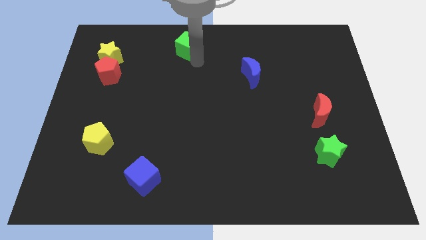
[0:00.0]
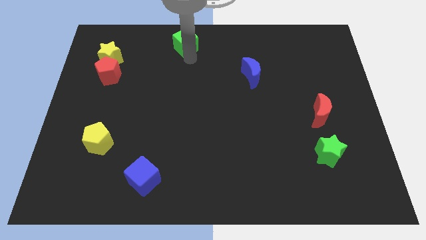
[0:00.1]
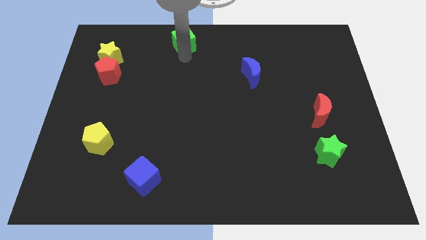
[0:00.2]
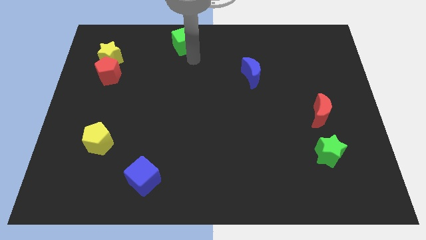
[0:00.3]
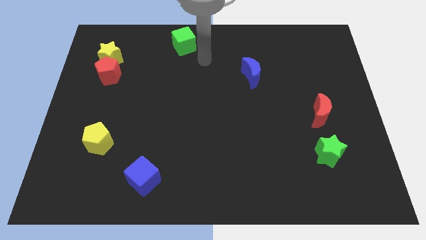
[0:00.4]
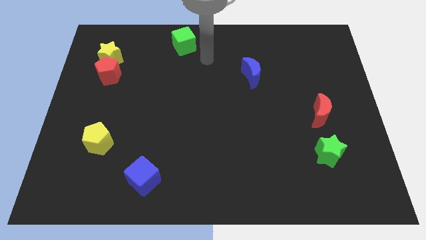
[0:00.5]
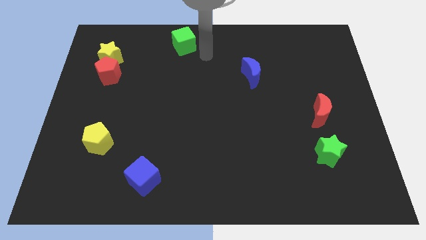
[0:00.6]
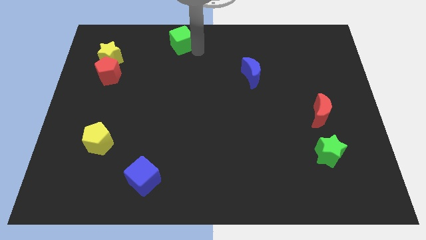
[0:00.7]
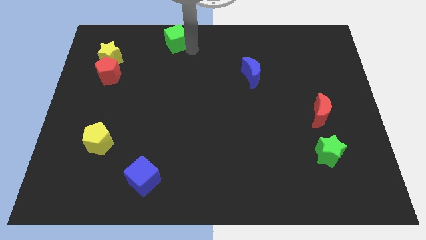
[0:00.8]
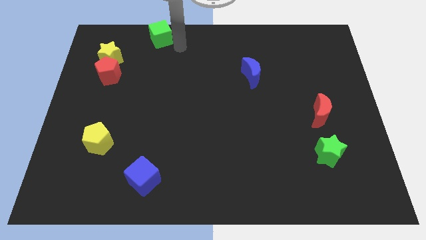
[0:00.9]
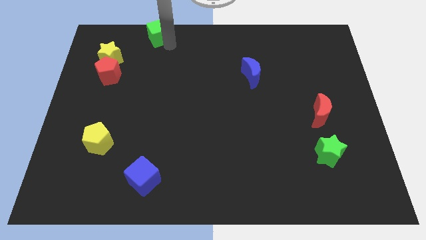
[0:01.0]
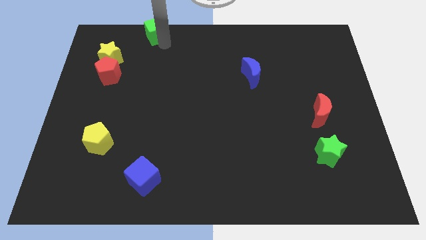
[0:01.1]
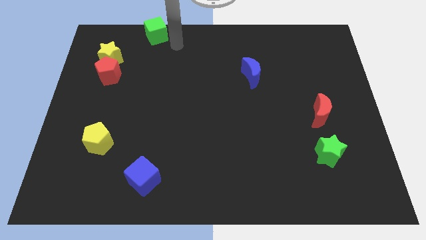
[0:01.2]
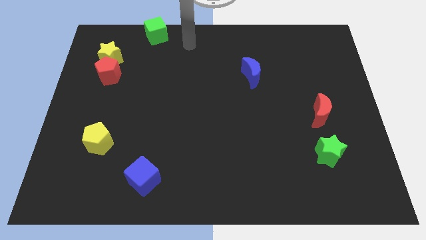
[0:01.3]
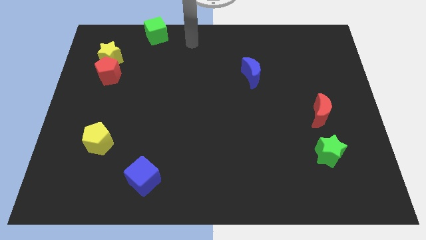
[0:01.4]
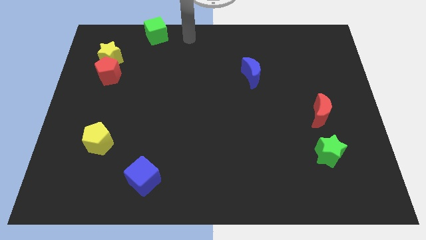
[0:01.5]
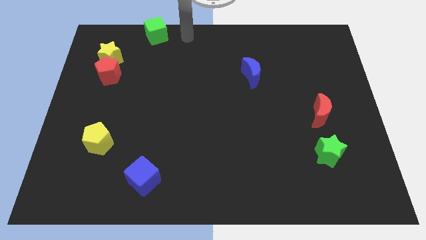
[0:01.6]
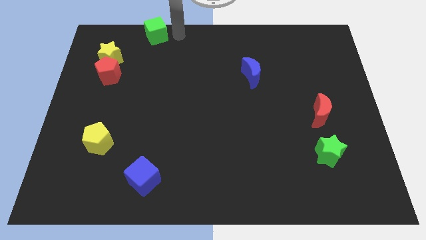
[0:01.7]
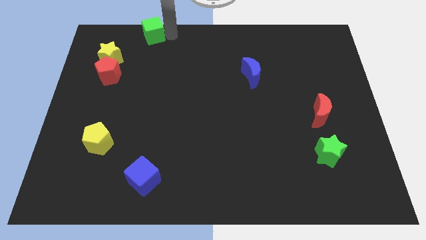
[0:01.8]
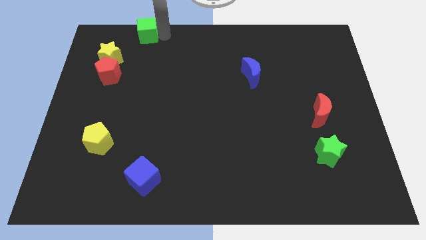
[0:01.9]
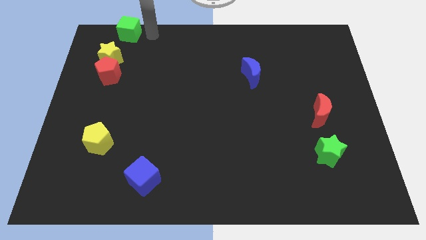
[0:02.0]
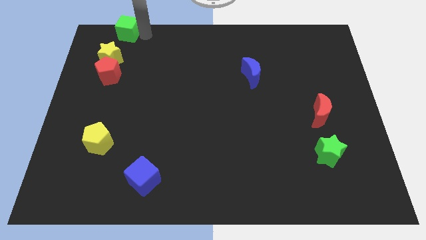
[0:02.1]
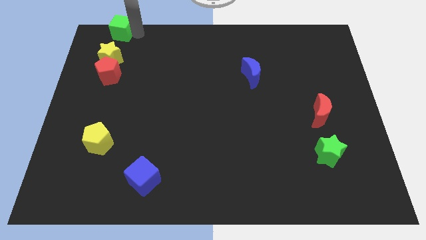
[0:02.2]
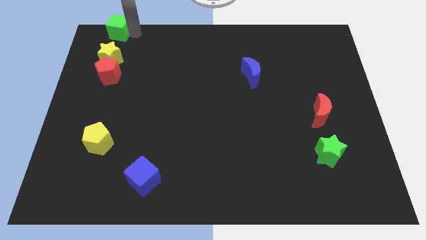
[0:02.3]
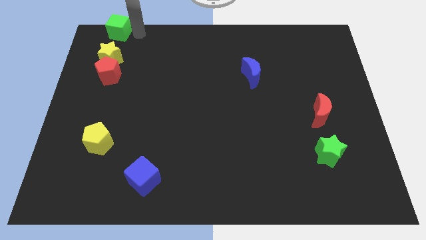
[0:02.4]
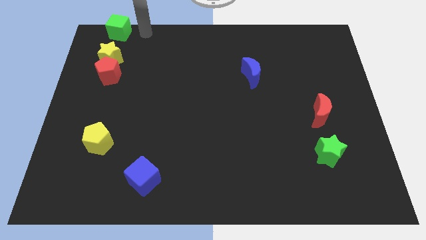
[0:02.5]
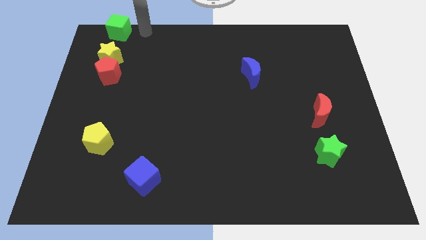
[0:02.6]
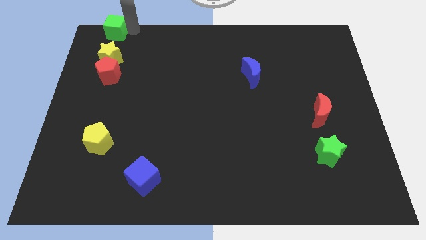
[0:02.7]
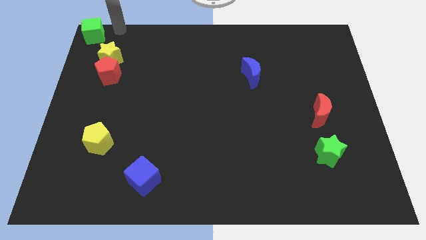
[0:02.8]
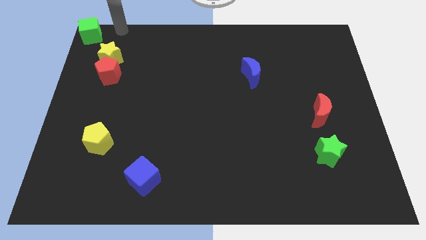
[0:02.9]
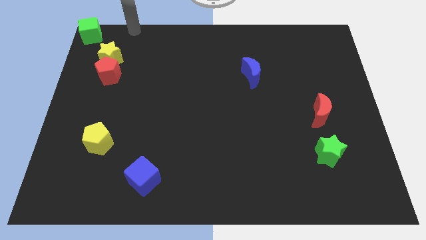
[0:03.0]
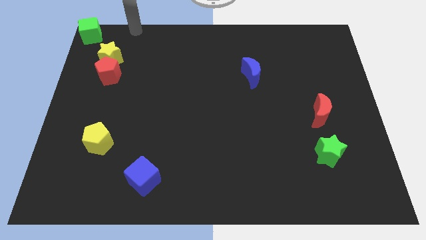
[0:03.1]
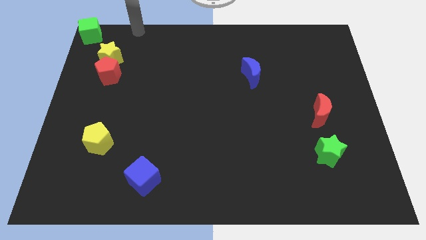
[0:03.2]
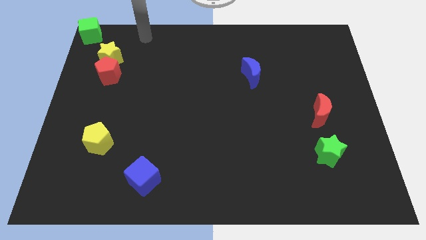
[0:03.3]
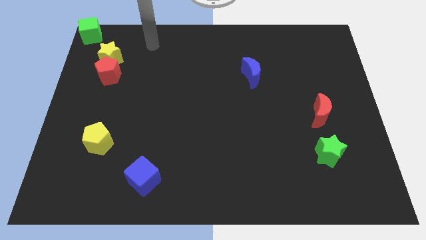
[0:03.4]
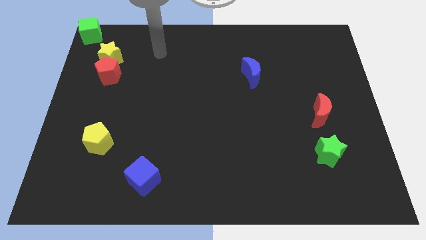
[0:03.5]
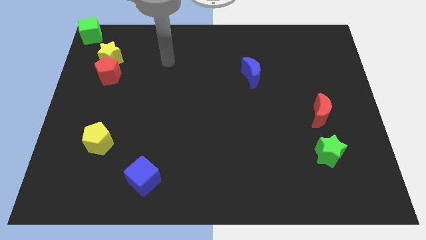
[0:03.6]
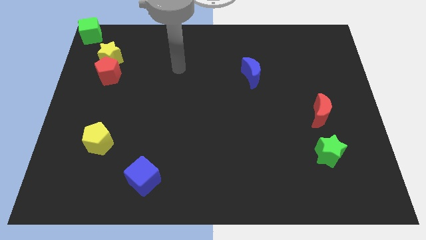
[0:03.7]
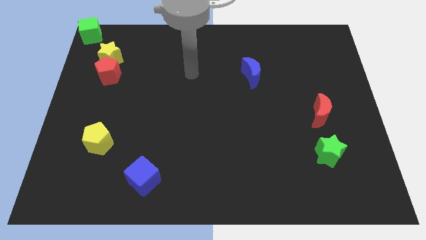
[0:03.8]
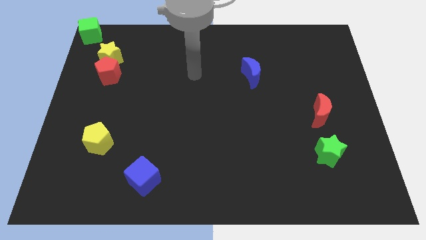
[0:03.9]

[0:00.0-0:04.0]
move green cube at top left corner

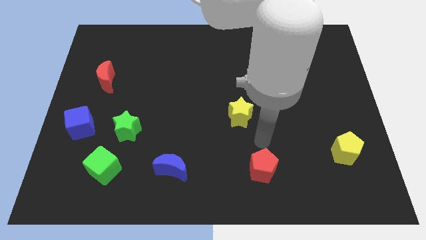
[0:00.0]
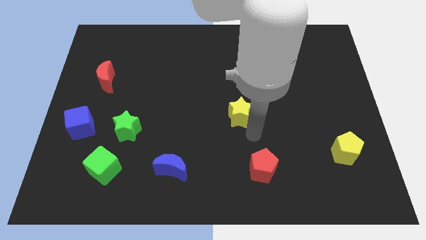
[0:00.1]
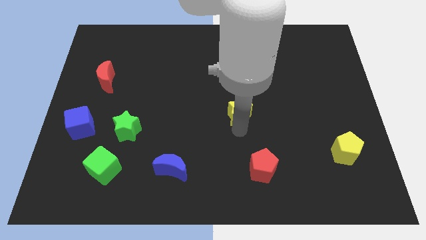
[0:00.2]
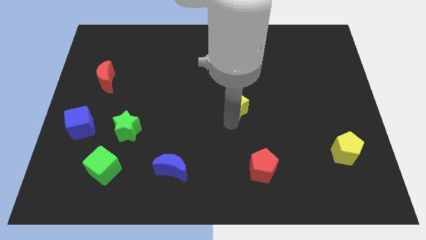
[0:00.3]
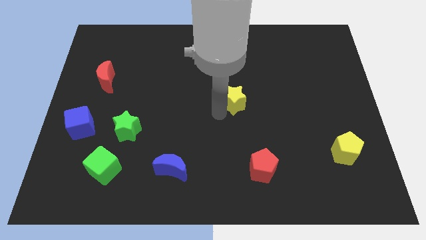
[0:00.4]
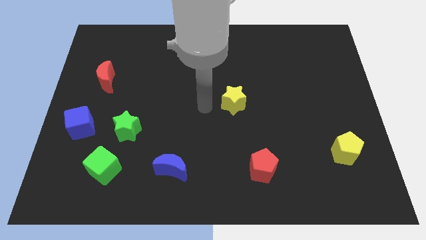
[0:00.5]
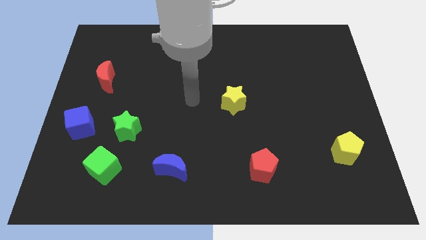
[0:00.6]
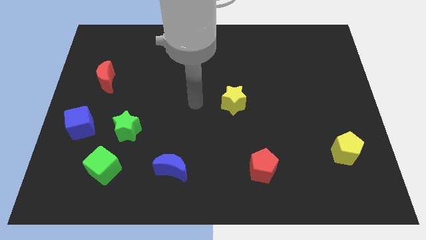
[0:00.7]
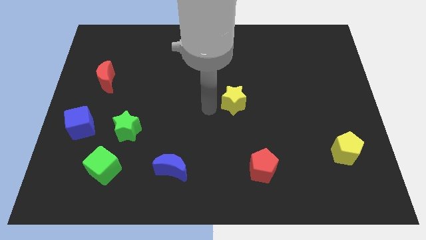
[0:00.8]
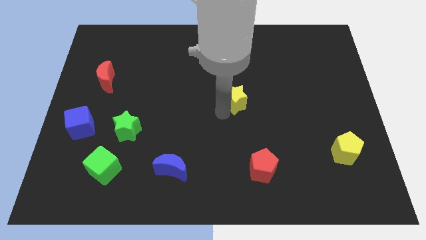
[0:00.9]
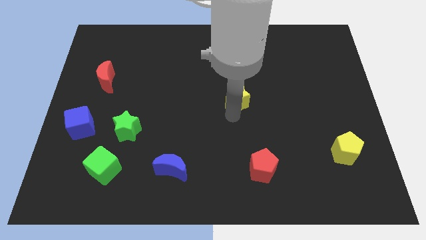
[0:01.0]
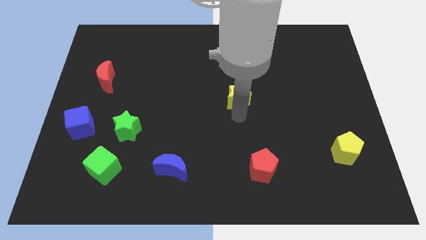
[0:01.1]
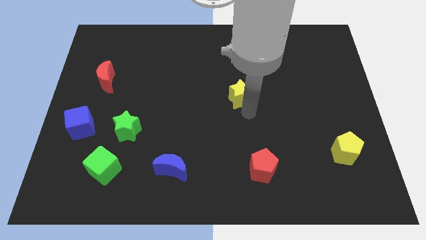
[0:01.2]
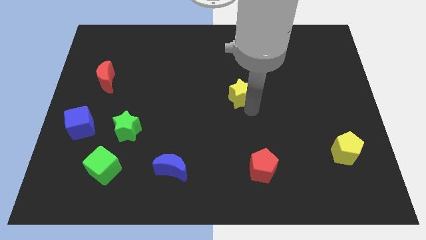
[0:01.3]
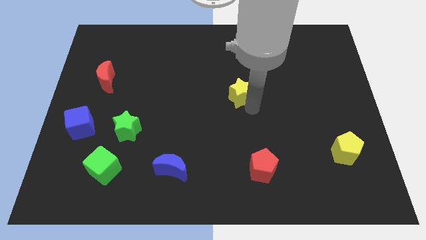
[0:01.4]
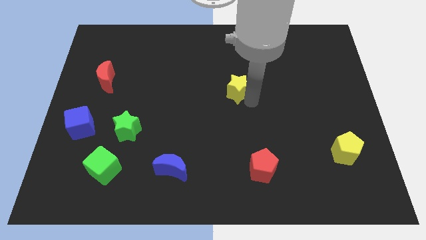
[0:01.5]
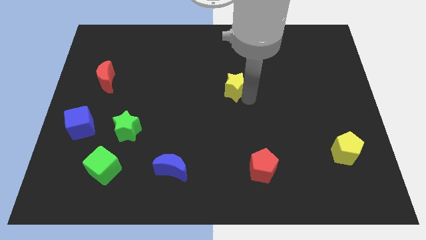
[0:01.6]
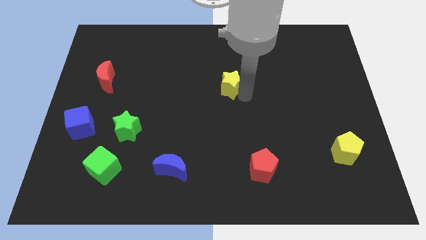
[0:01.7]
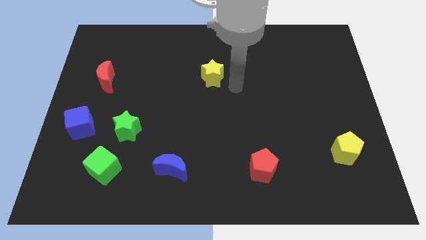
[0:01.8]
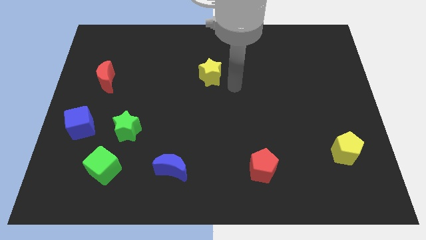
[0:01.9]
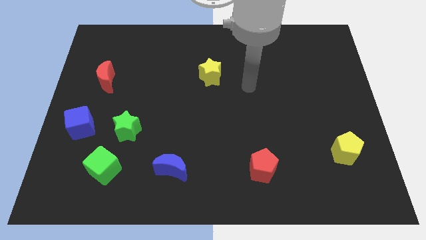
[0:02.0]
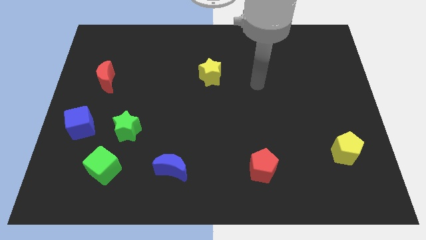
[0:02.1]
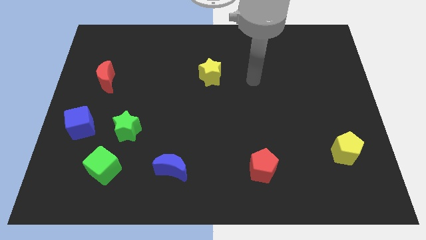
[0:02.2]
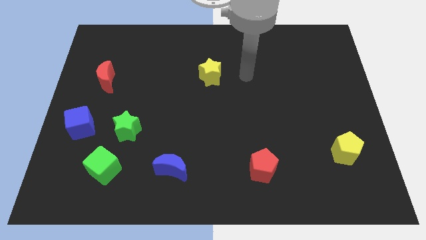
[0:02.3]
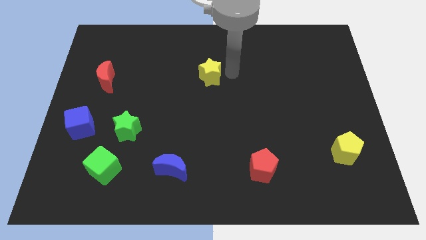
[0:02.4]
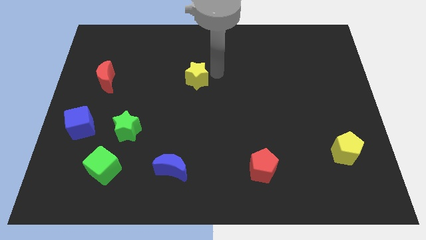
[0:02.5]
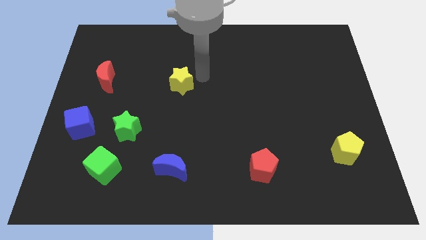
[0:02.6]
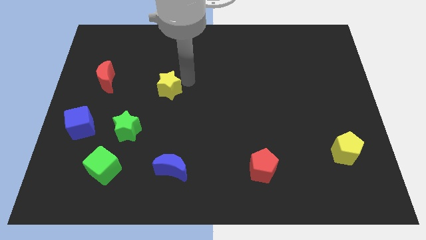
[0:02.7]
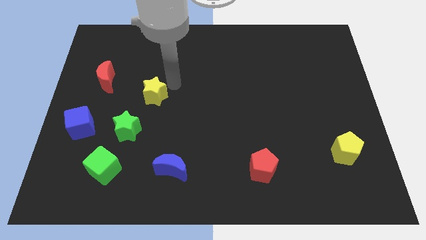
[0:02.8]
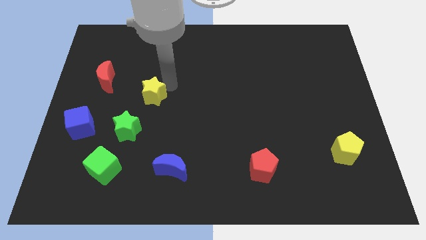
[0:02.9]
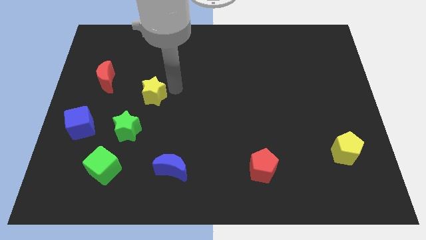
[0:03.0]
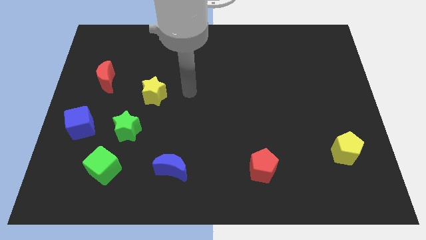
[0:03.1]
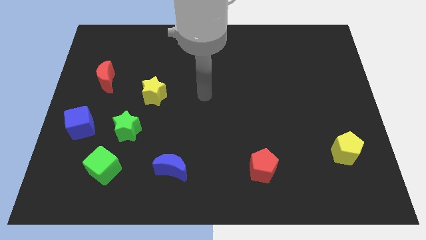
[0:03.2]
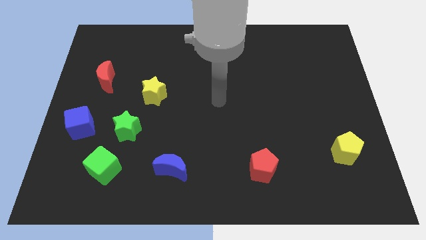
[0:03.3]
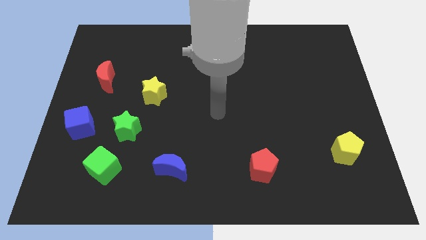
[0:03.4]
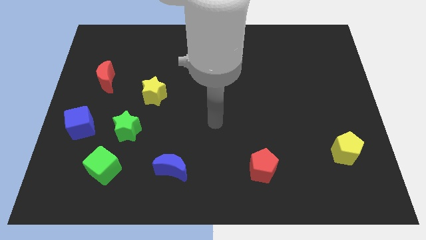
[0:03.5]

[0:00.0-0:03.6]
place the yellow star at the top right side of the green star

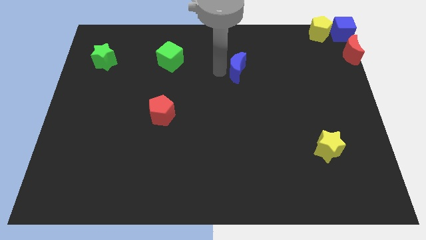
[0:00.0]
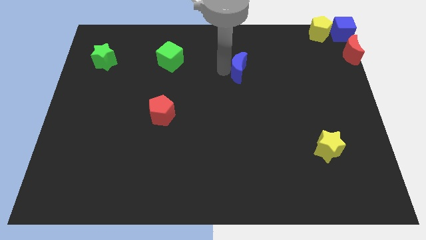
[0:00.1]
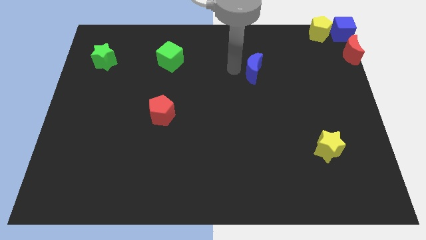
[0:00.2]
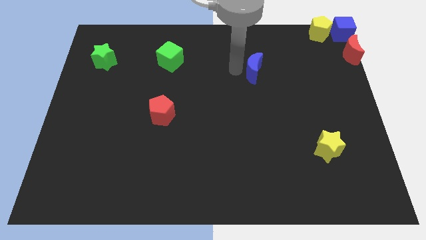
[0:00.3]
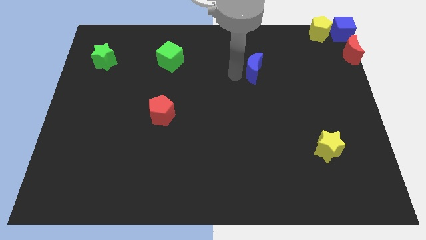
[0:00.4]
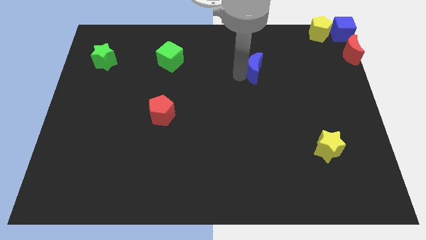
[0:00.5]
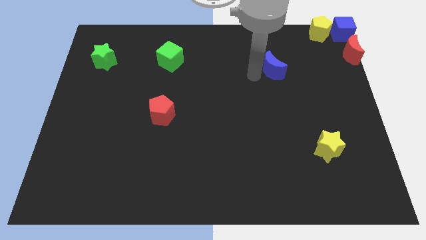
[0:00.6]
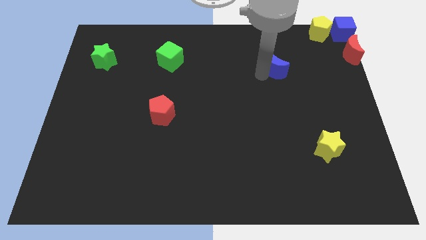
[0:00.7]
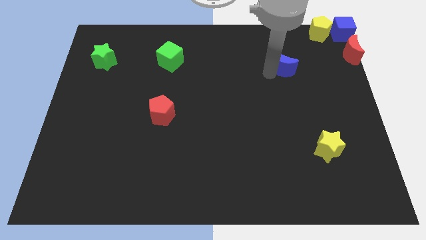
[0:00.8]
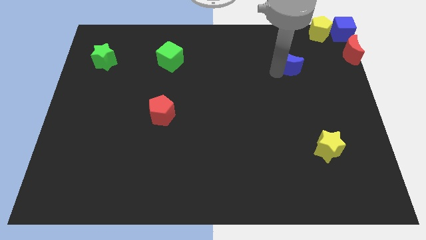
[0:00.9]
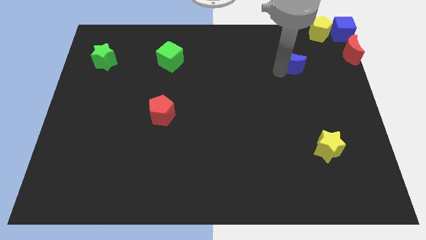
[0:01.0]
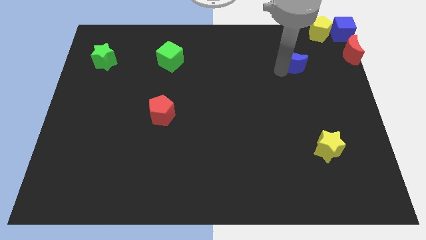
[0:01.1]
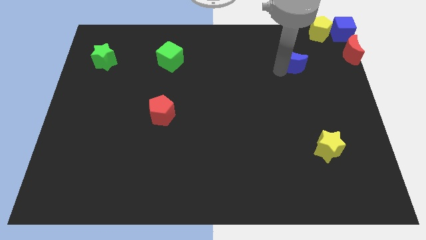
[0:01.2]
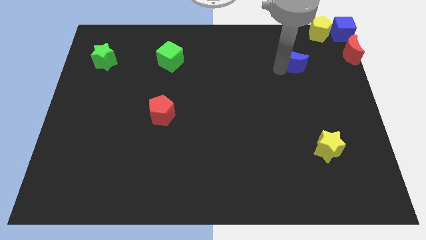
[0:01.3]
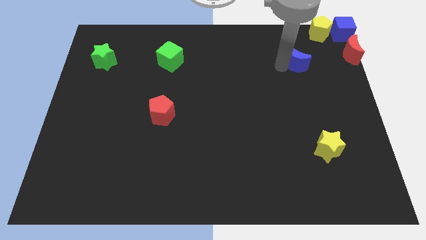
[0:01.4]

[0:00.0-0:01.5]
push the blue crescent towards the top right of the board
